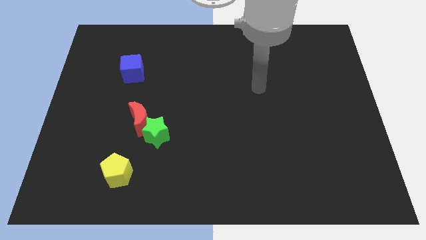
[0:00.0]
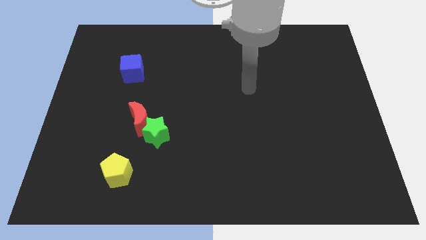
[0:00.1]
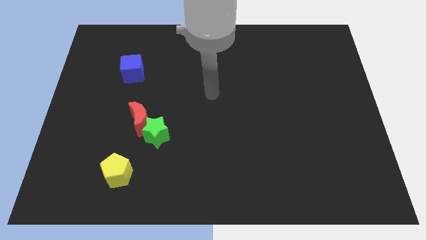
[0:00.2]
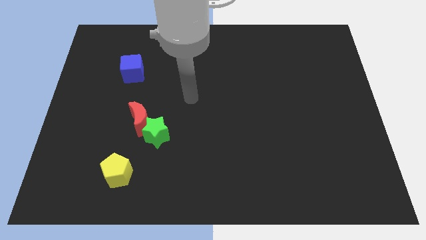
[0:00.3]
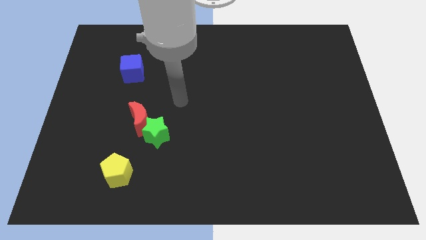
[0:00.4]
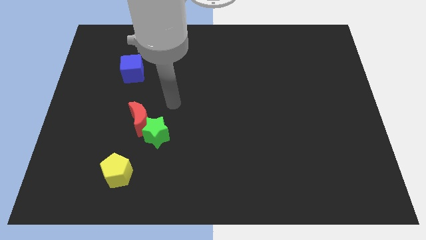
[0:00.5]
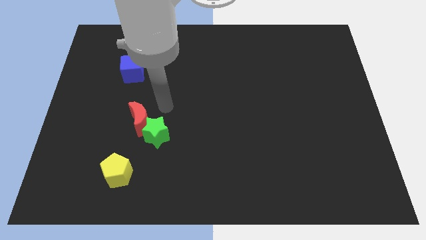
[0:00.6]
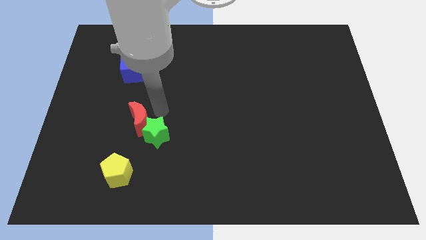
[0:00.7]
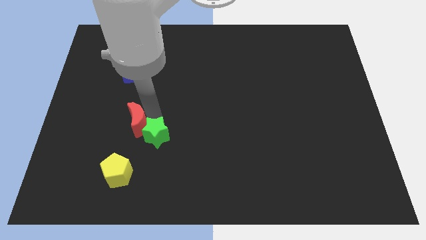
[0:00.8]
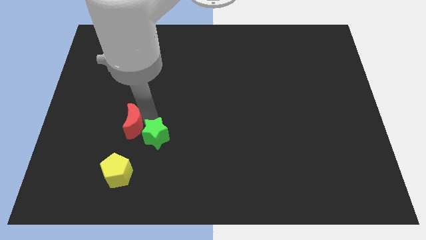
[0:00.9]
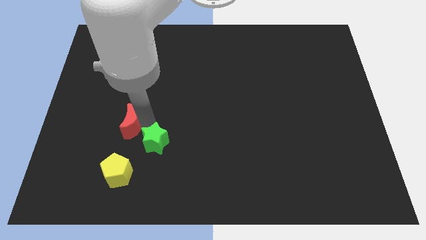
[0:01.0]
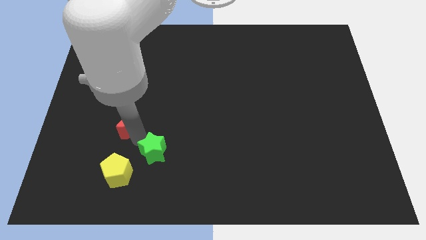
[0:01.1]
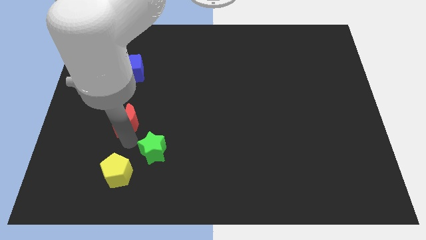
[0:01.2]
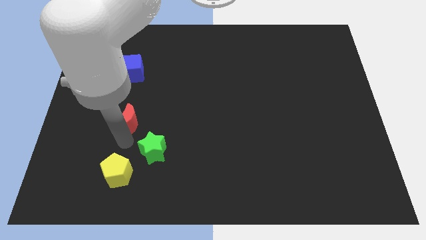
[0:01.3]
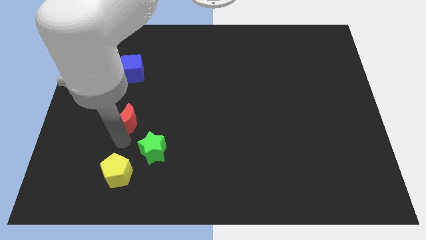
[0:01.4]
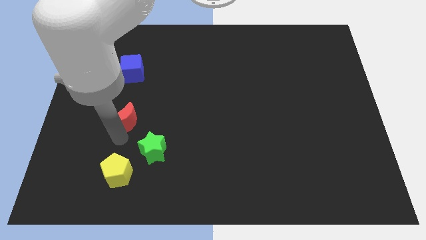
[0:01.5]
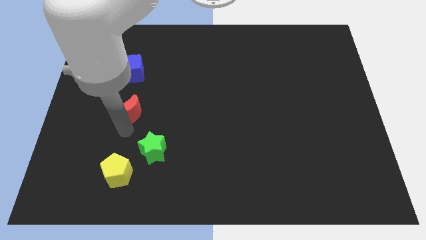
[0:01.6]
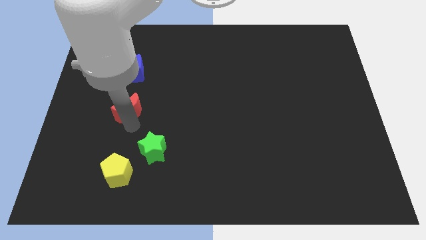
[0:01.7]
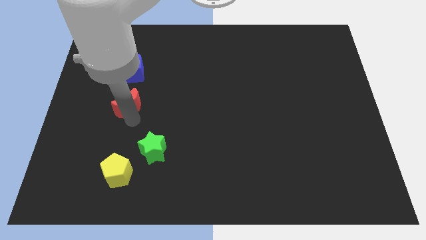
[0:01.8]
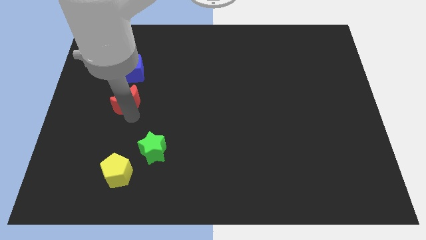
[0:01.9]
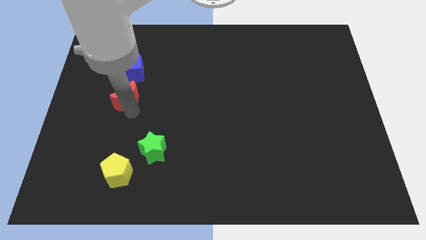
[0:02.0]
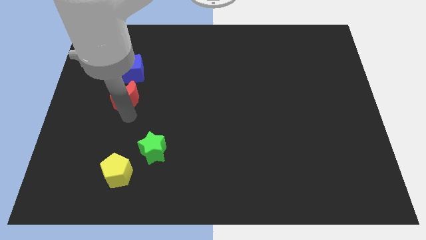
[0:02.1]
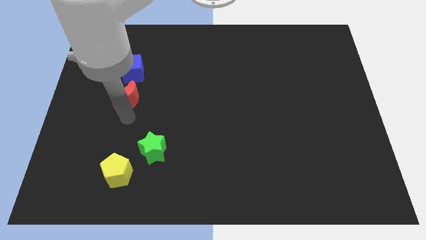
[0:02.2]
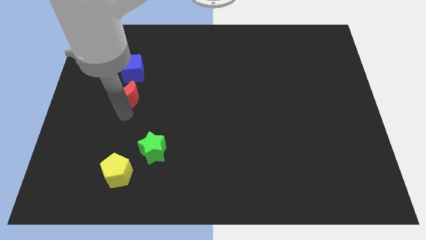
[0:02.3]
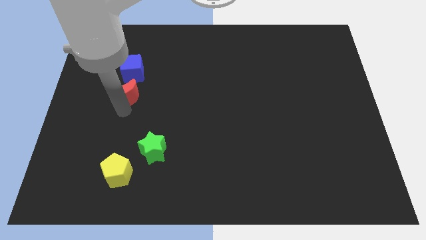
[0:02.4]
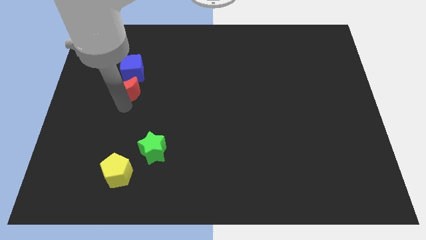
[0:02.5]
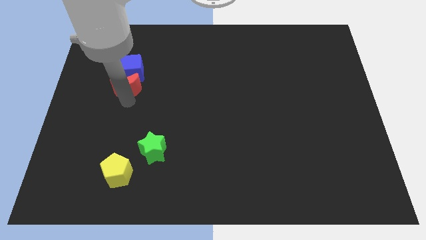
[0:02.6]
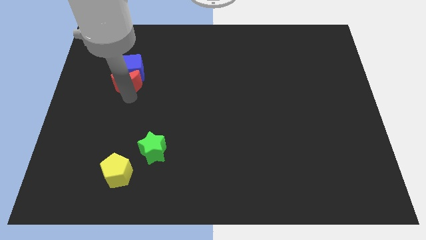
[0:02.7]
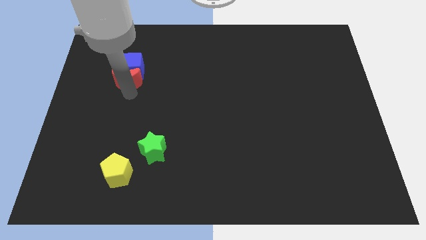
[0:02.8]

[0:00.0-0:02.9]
push the moon towards the blue block

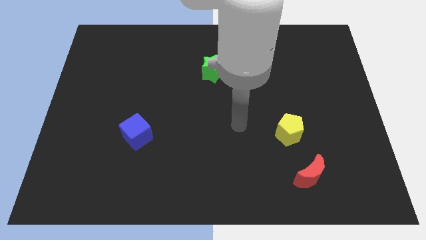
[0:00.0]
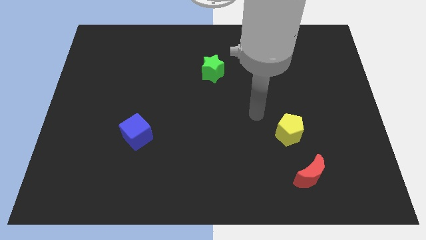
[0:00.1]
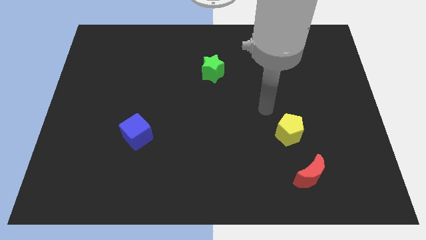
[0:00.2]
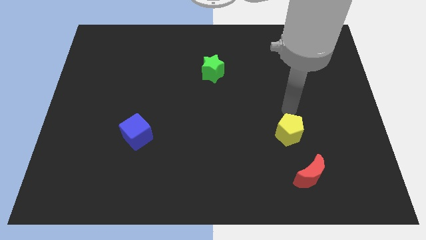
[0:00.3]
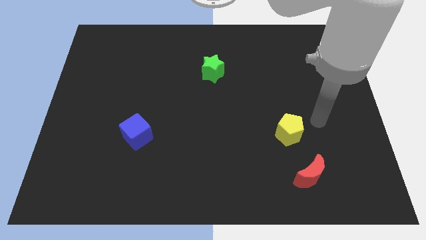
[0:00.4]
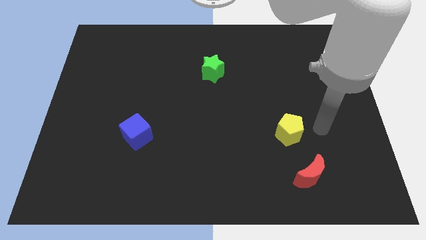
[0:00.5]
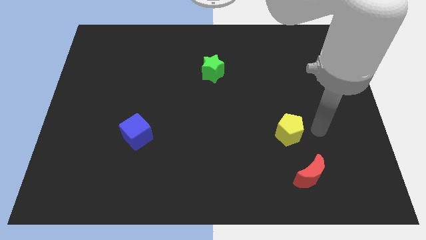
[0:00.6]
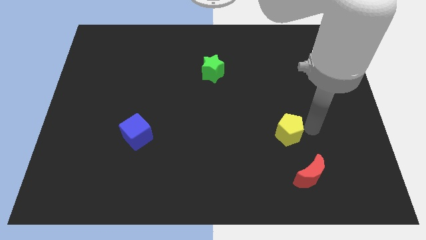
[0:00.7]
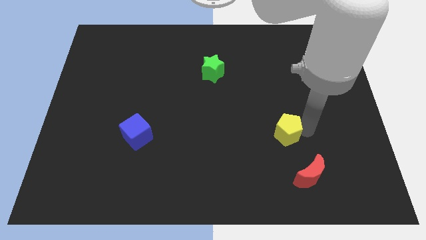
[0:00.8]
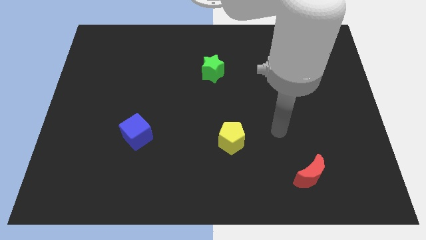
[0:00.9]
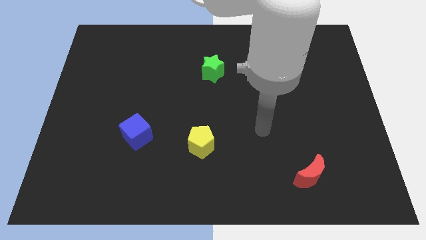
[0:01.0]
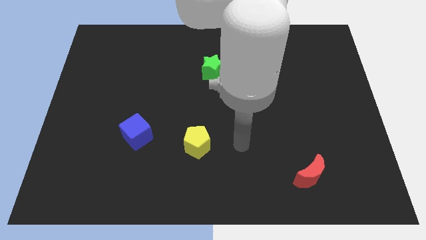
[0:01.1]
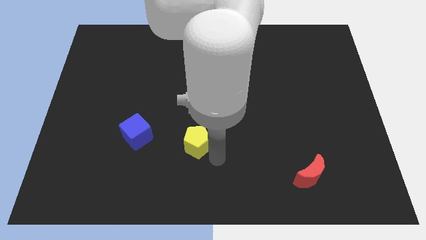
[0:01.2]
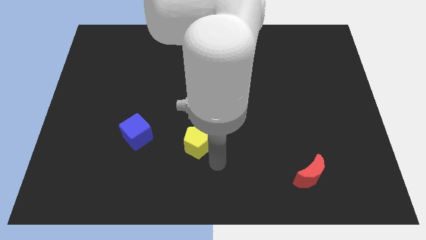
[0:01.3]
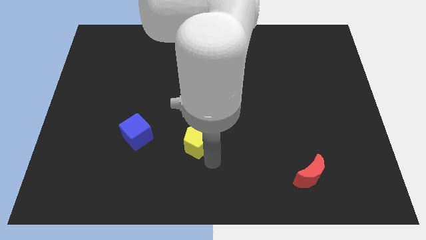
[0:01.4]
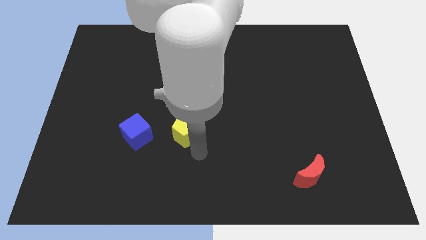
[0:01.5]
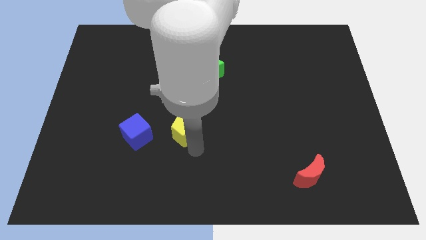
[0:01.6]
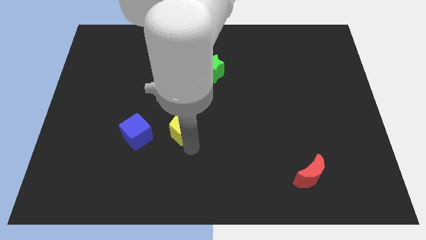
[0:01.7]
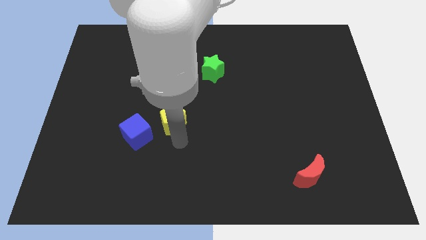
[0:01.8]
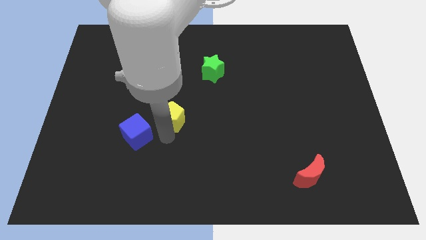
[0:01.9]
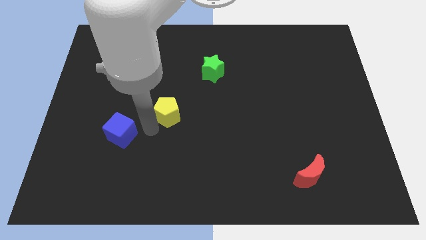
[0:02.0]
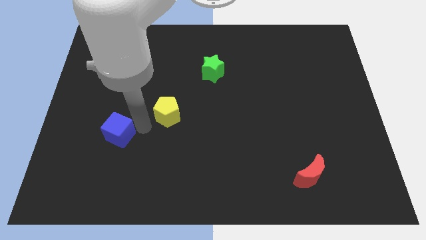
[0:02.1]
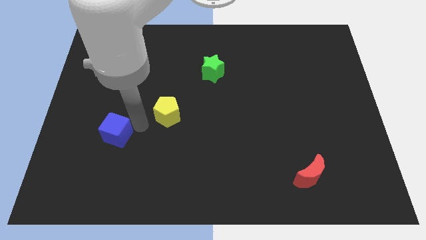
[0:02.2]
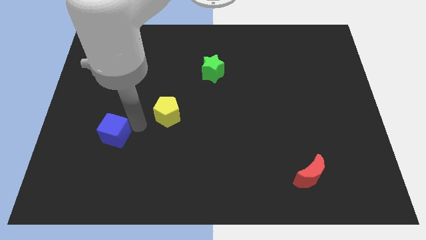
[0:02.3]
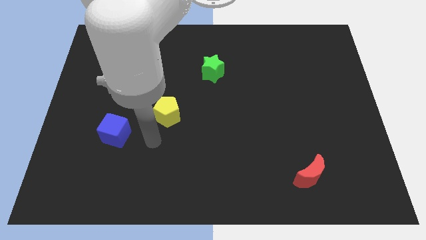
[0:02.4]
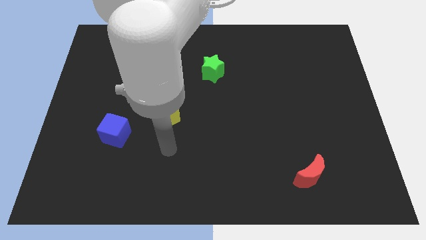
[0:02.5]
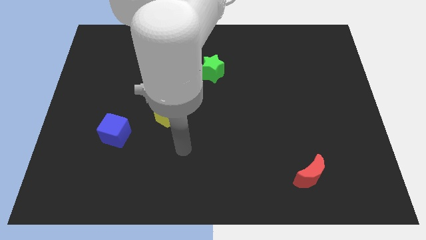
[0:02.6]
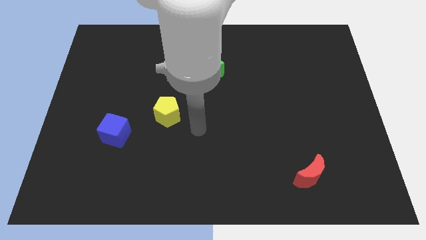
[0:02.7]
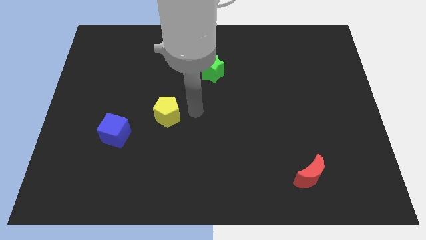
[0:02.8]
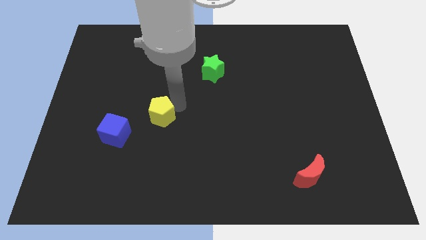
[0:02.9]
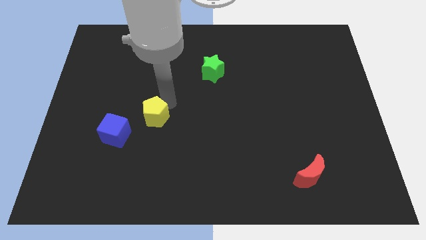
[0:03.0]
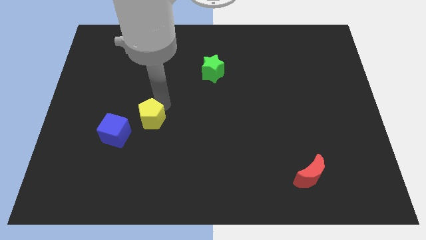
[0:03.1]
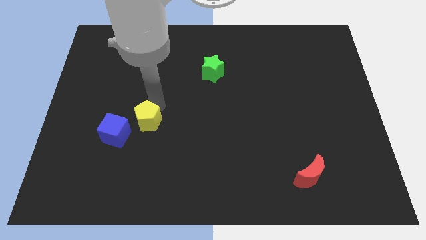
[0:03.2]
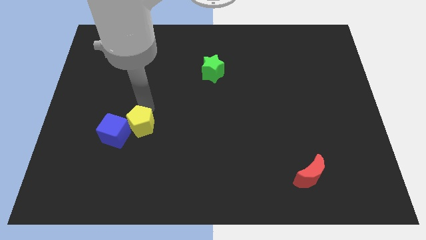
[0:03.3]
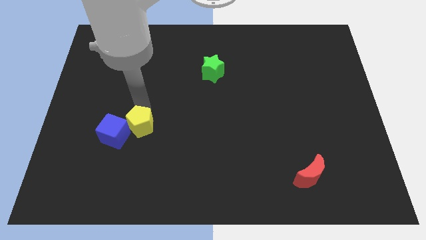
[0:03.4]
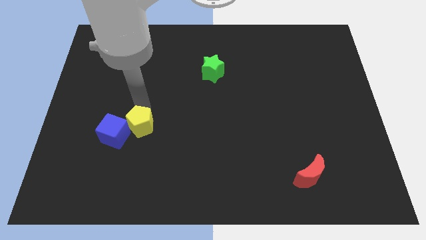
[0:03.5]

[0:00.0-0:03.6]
slide the yellow block next to the blue block

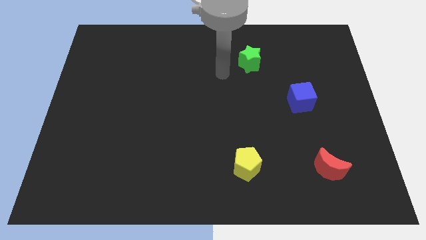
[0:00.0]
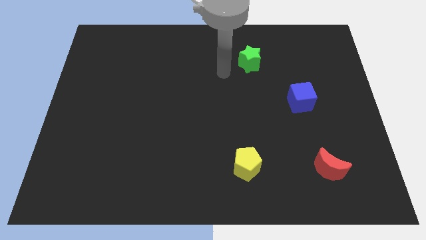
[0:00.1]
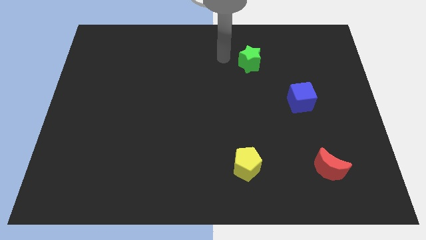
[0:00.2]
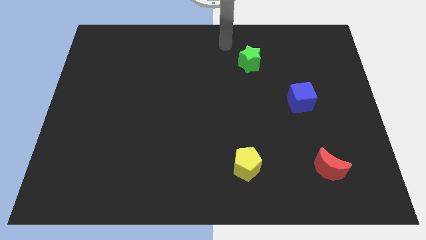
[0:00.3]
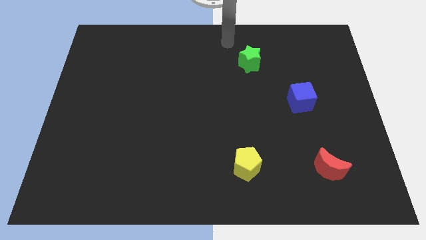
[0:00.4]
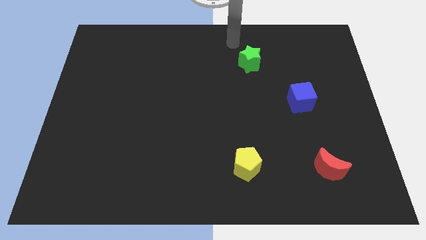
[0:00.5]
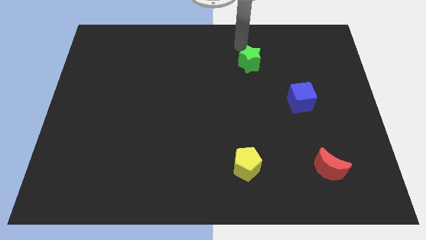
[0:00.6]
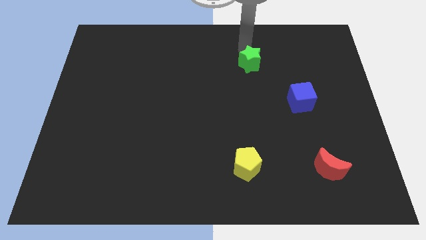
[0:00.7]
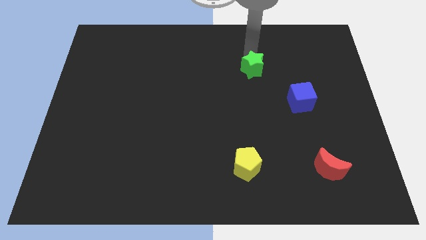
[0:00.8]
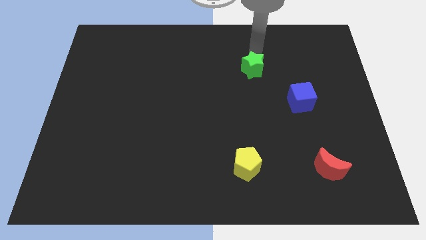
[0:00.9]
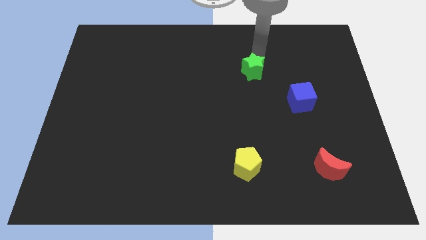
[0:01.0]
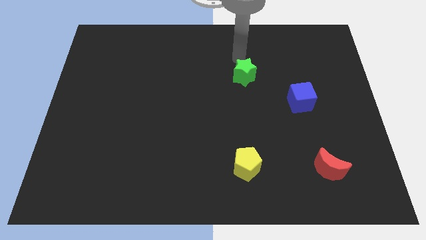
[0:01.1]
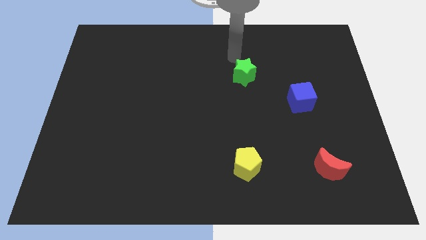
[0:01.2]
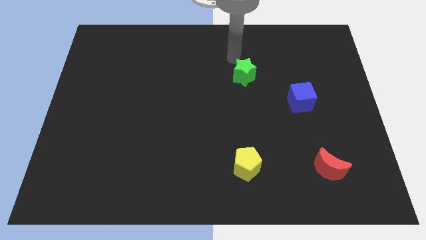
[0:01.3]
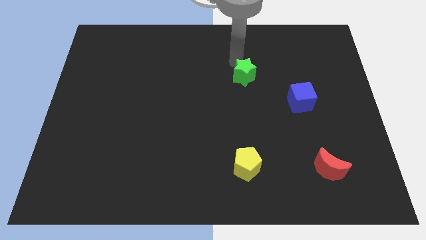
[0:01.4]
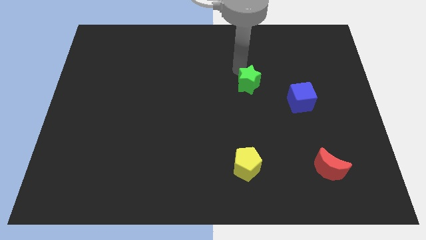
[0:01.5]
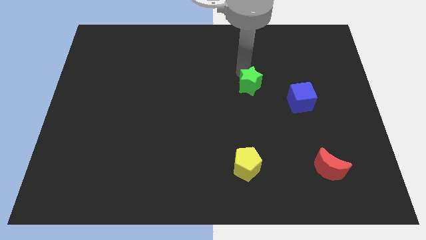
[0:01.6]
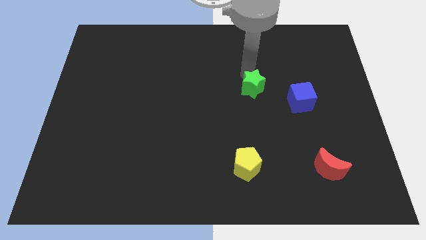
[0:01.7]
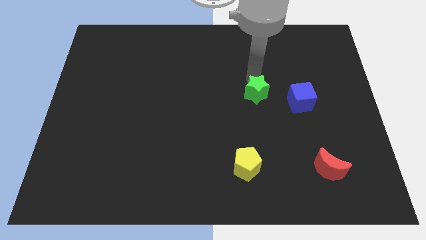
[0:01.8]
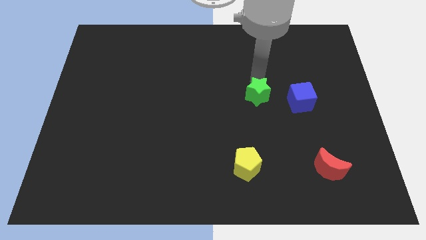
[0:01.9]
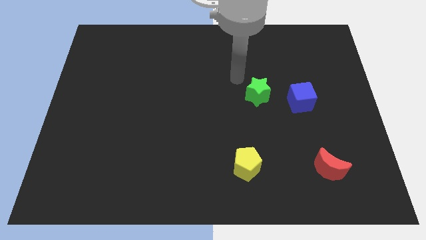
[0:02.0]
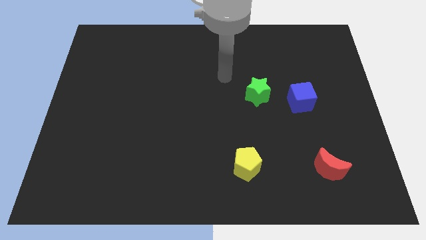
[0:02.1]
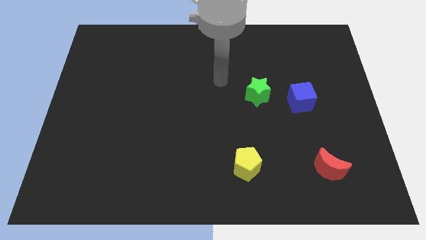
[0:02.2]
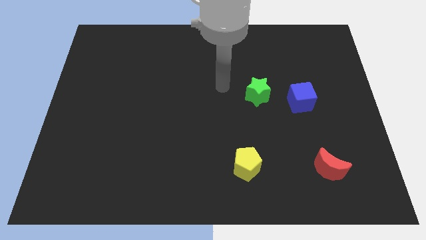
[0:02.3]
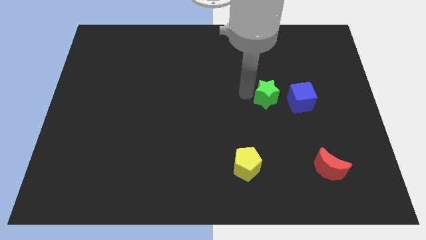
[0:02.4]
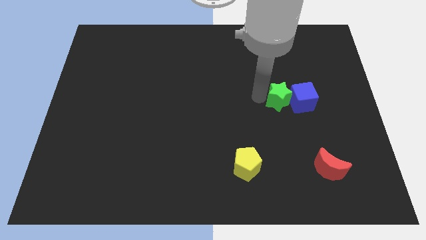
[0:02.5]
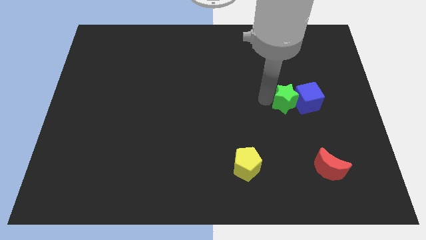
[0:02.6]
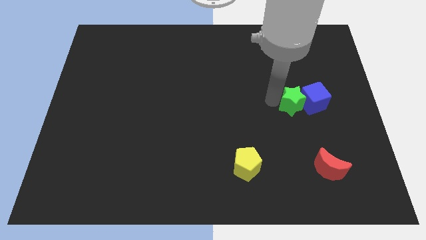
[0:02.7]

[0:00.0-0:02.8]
slide the green block to the cube
